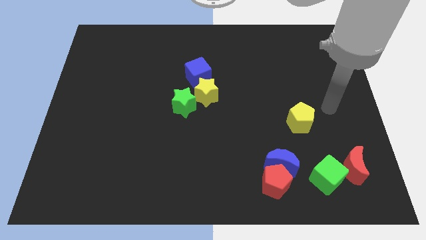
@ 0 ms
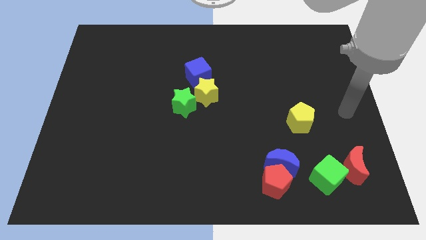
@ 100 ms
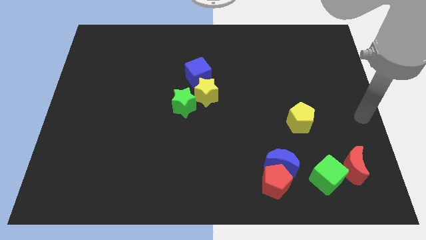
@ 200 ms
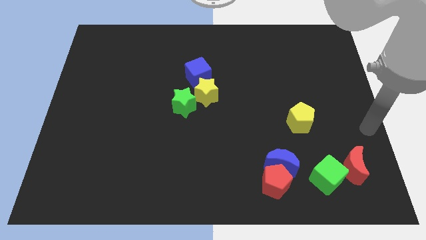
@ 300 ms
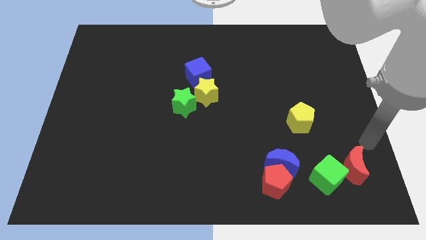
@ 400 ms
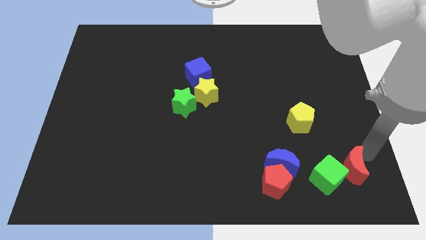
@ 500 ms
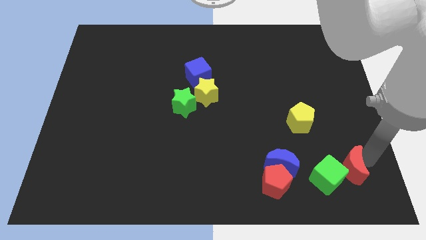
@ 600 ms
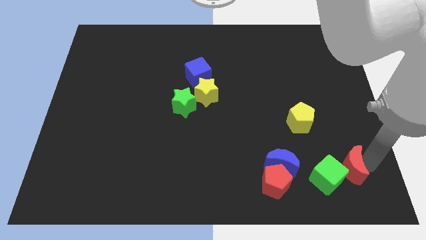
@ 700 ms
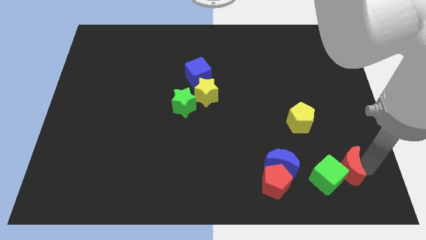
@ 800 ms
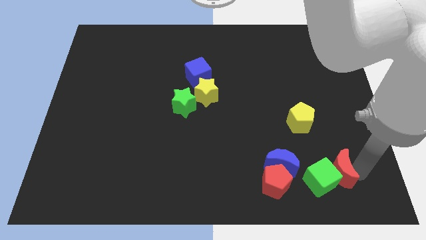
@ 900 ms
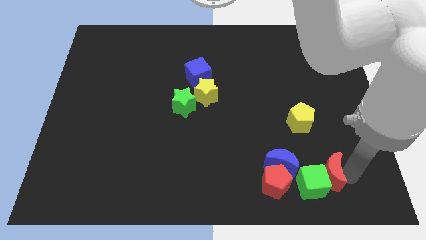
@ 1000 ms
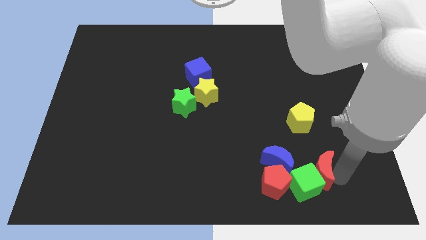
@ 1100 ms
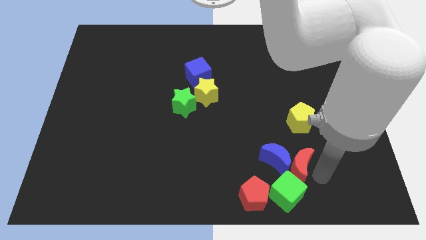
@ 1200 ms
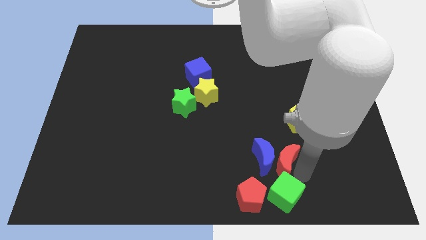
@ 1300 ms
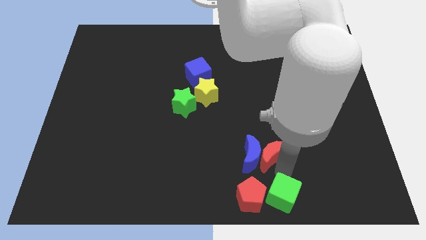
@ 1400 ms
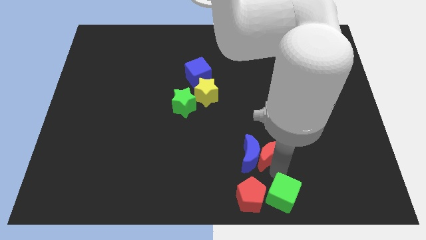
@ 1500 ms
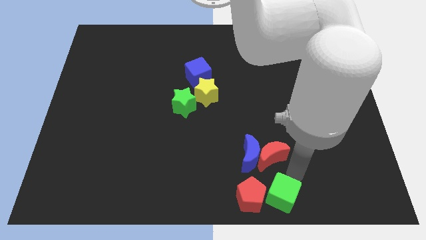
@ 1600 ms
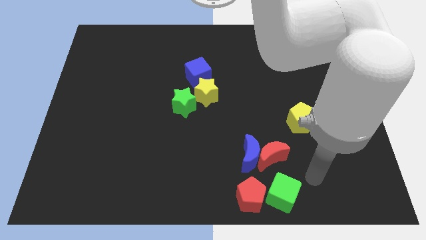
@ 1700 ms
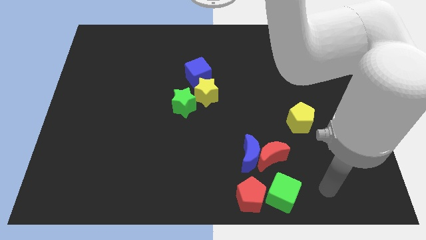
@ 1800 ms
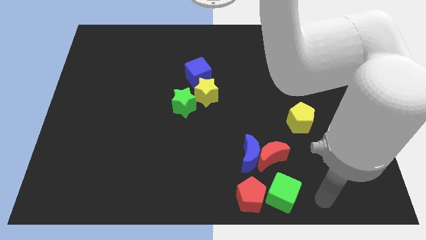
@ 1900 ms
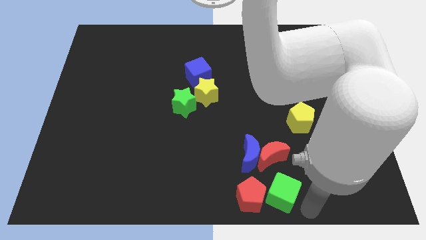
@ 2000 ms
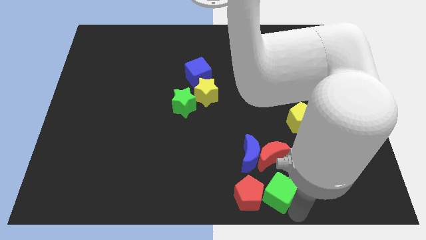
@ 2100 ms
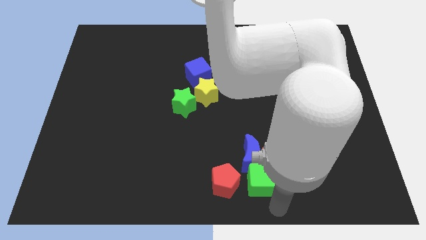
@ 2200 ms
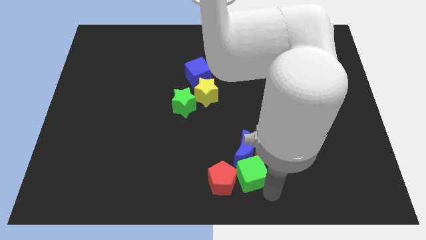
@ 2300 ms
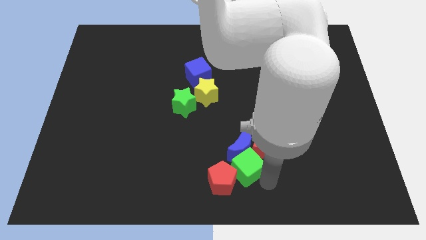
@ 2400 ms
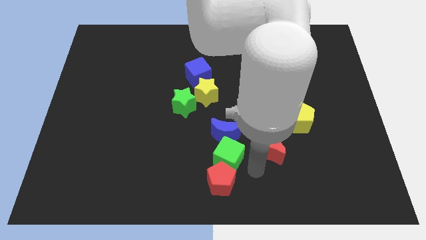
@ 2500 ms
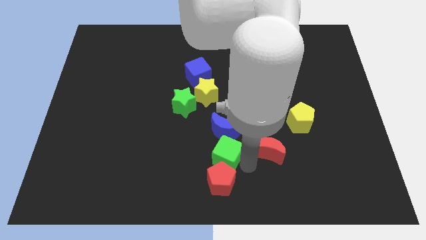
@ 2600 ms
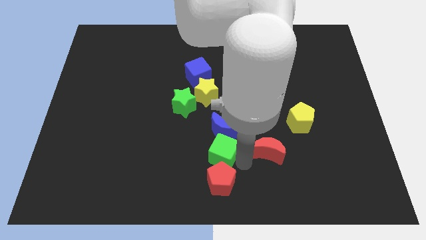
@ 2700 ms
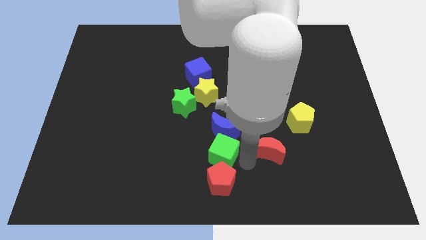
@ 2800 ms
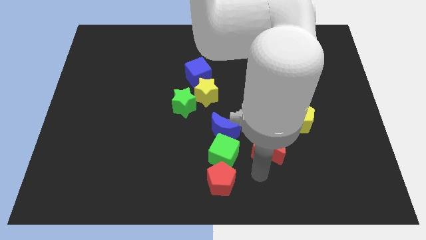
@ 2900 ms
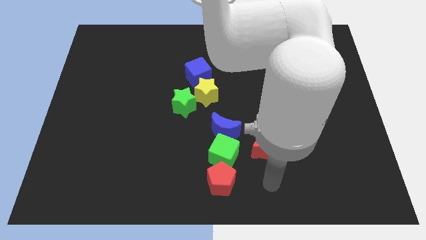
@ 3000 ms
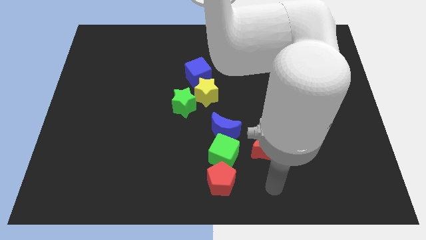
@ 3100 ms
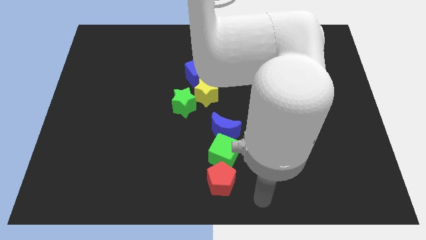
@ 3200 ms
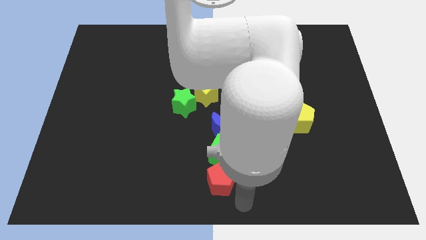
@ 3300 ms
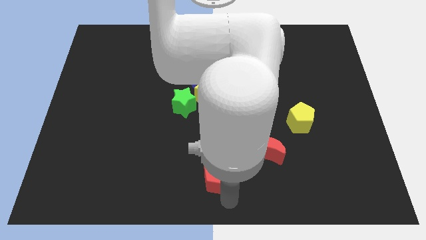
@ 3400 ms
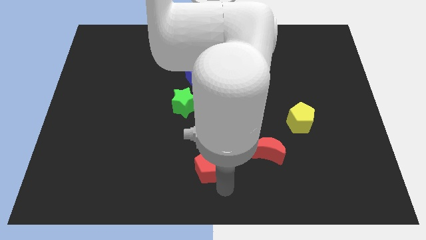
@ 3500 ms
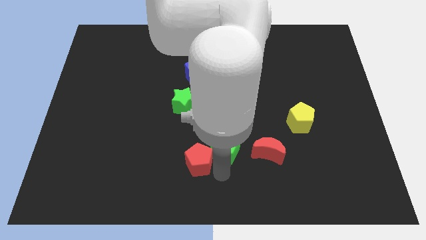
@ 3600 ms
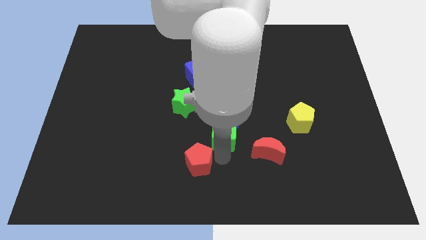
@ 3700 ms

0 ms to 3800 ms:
move the group of blocks to the center of the board

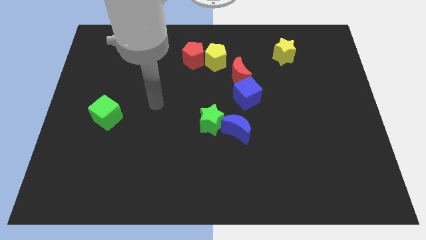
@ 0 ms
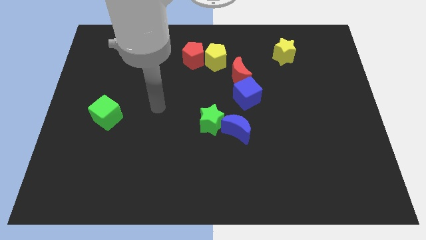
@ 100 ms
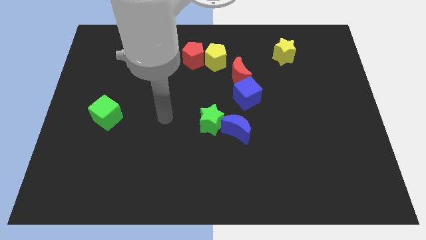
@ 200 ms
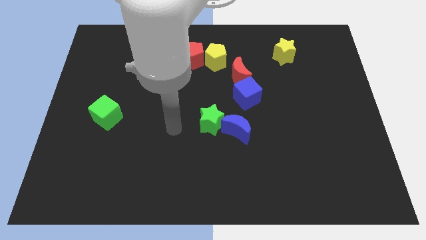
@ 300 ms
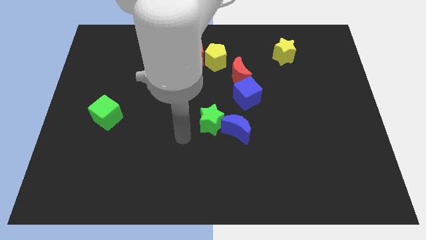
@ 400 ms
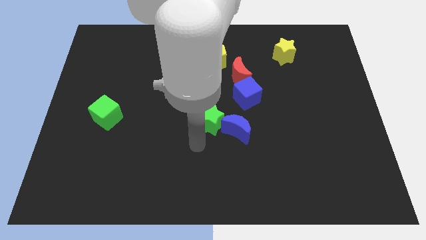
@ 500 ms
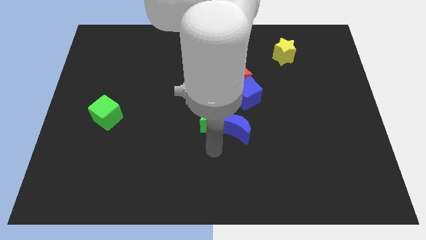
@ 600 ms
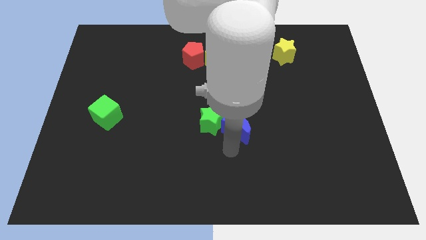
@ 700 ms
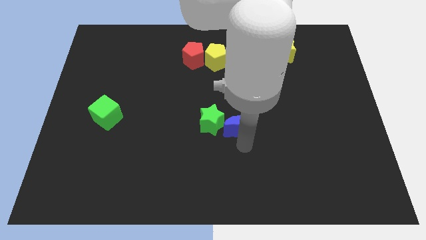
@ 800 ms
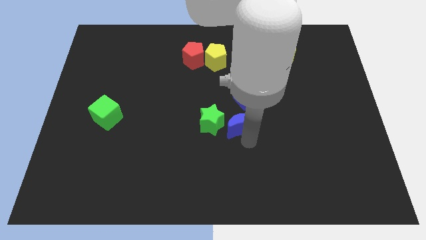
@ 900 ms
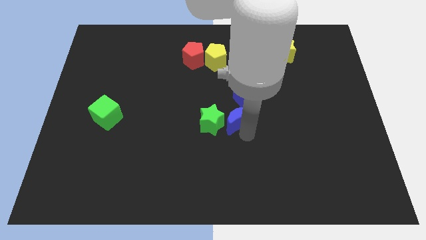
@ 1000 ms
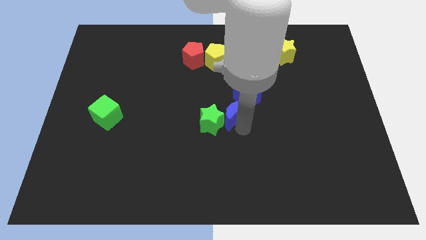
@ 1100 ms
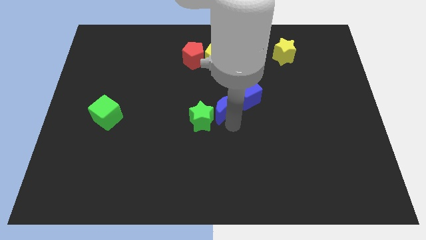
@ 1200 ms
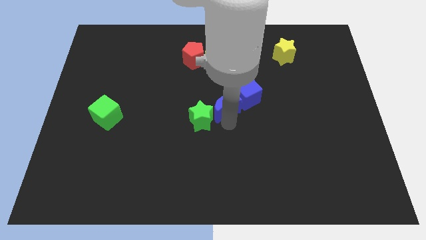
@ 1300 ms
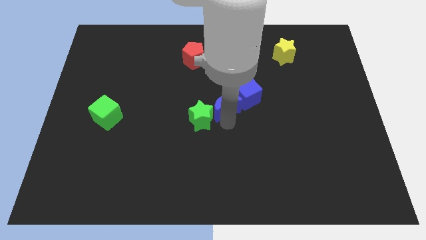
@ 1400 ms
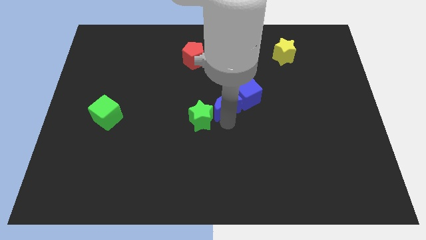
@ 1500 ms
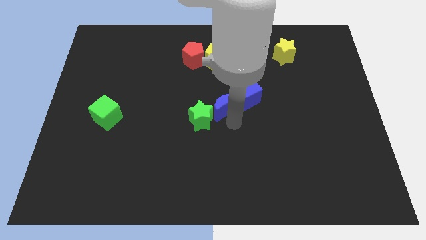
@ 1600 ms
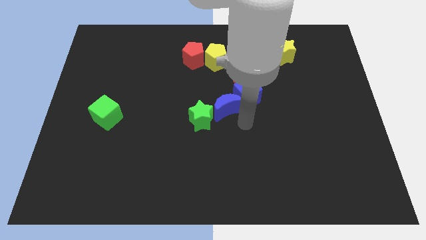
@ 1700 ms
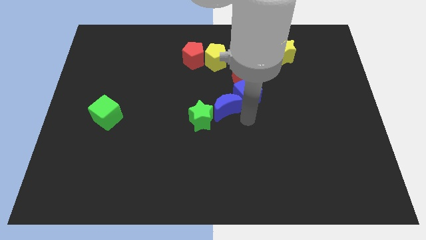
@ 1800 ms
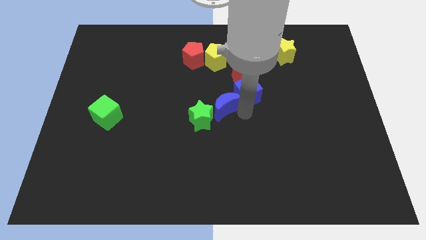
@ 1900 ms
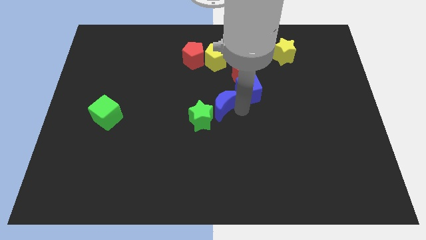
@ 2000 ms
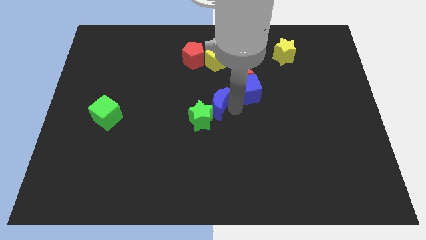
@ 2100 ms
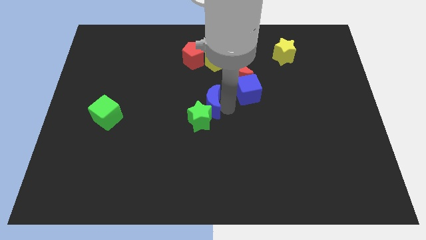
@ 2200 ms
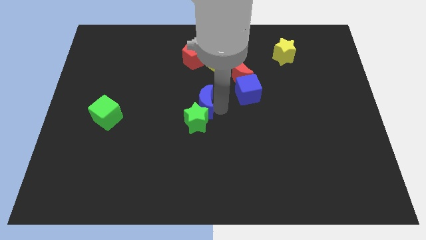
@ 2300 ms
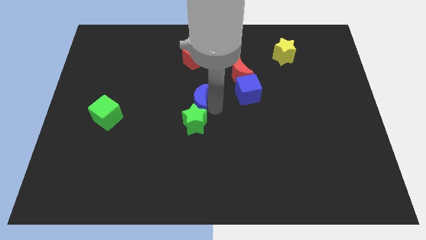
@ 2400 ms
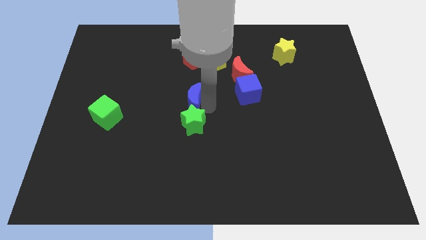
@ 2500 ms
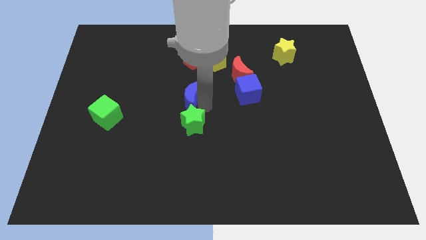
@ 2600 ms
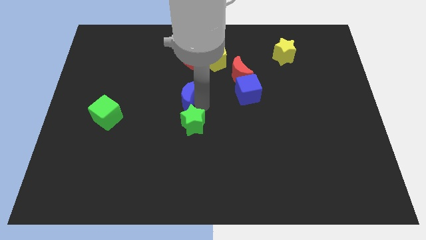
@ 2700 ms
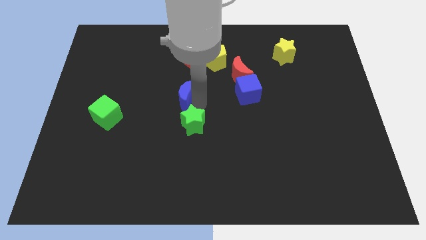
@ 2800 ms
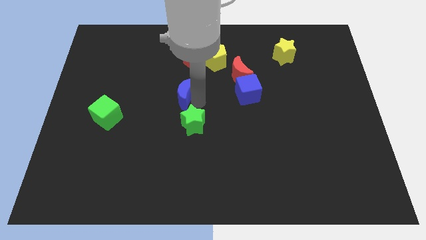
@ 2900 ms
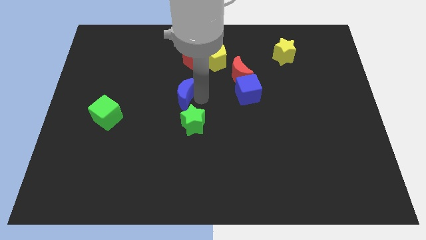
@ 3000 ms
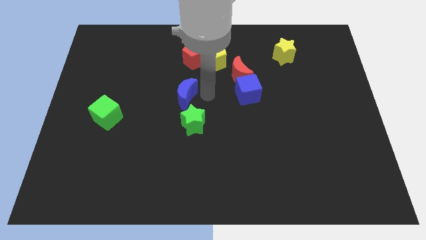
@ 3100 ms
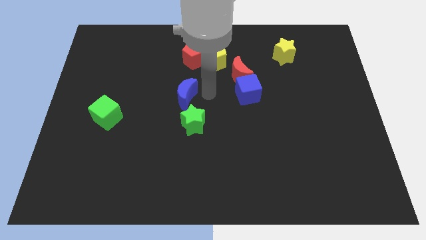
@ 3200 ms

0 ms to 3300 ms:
move your arm close to the blue moon

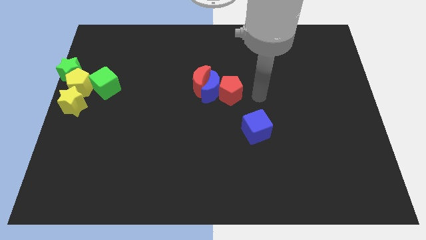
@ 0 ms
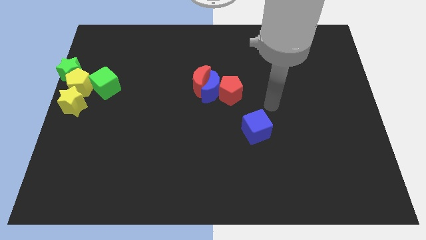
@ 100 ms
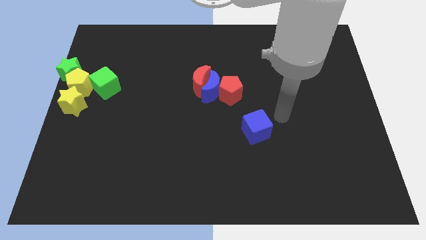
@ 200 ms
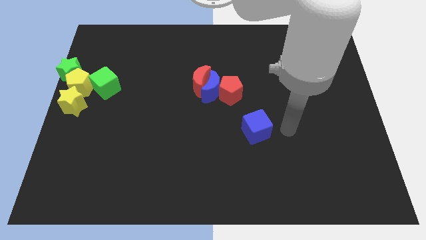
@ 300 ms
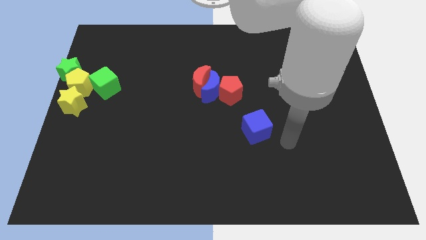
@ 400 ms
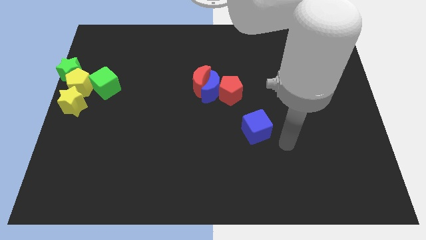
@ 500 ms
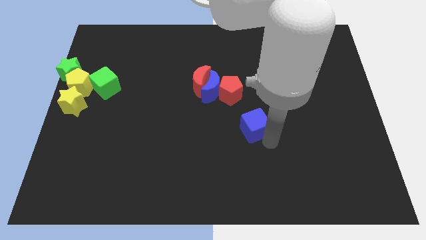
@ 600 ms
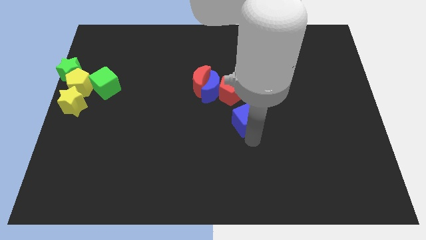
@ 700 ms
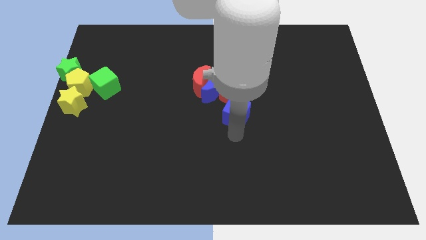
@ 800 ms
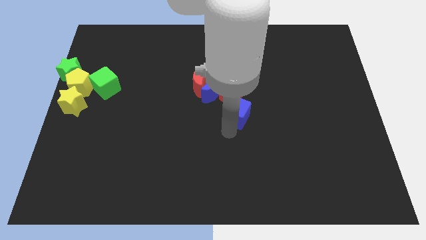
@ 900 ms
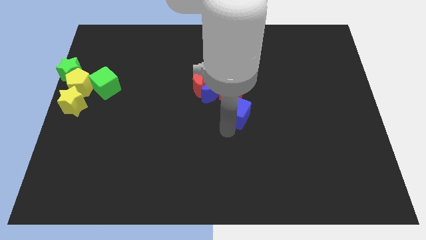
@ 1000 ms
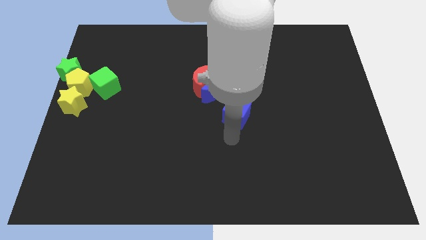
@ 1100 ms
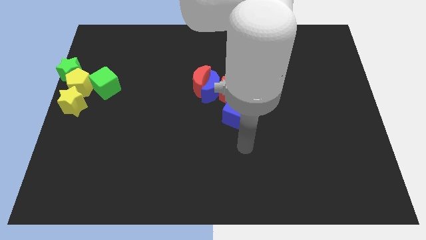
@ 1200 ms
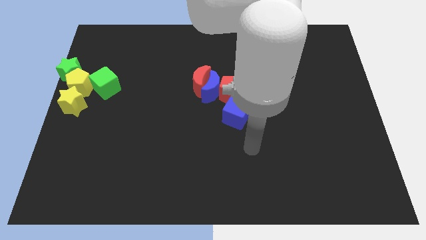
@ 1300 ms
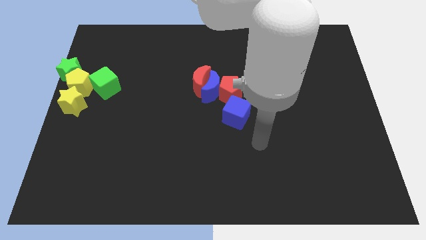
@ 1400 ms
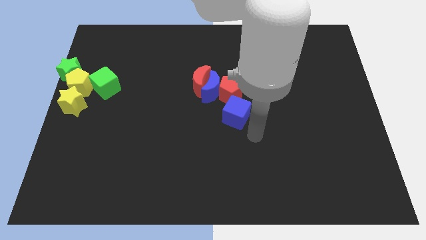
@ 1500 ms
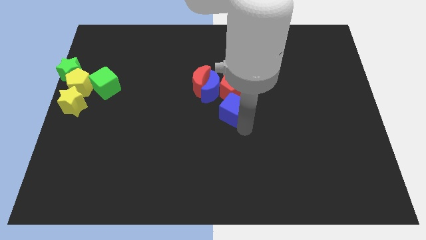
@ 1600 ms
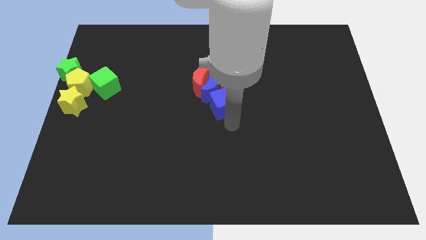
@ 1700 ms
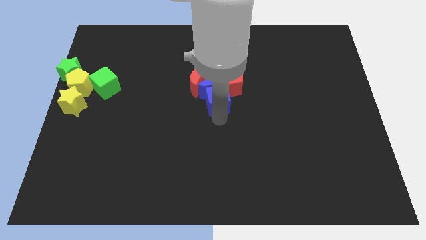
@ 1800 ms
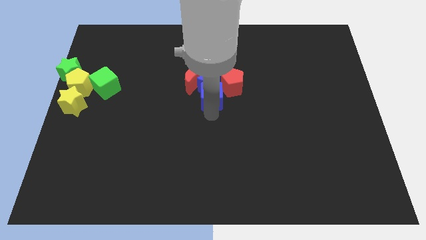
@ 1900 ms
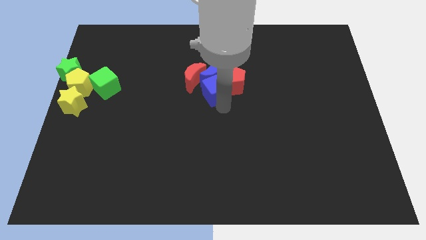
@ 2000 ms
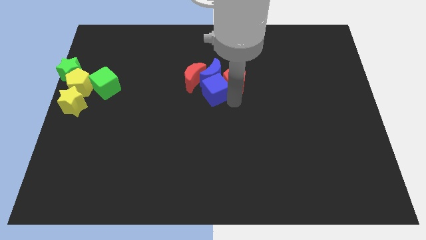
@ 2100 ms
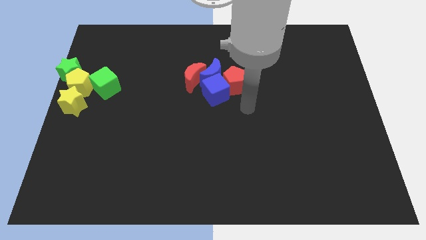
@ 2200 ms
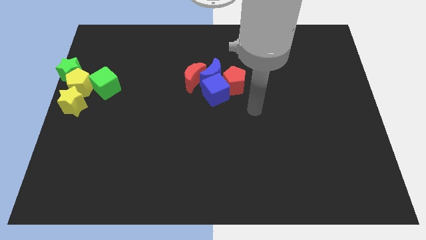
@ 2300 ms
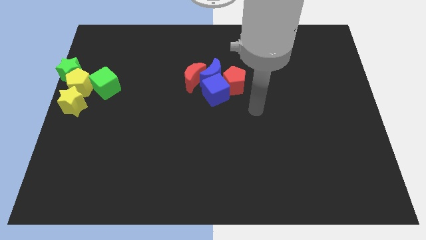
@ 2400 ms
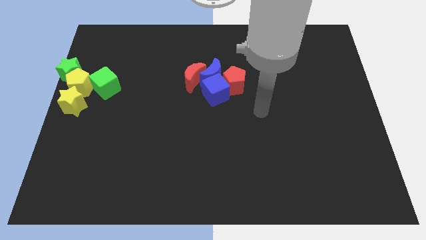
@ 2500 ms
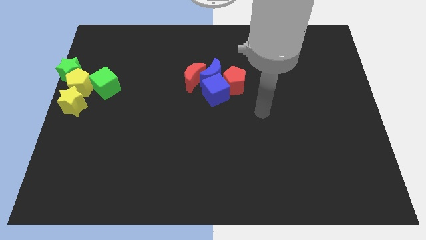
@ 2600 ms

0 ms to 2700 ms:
move blue cube below the red moon
